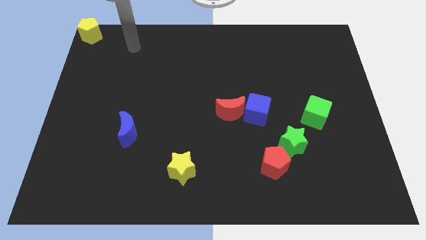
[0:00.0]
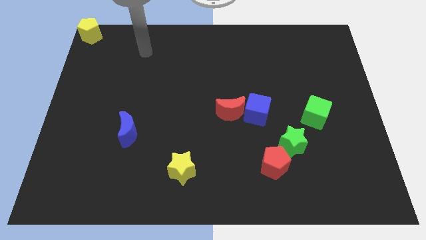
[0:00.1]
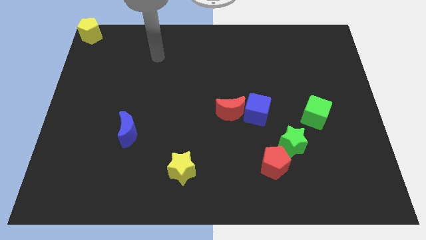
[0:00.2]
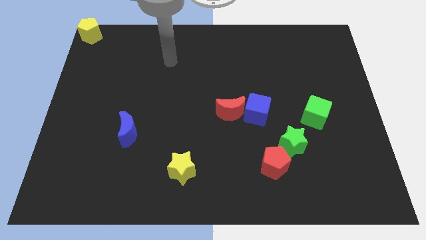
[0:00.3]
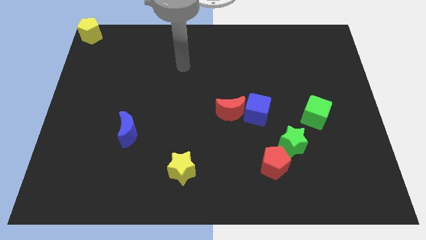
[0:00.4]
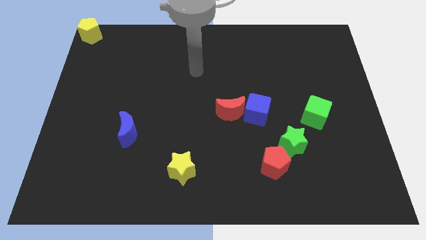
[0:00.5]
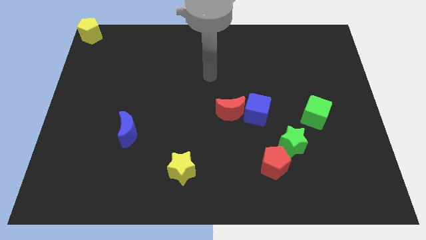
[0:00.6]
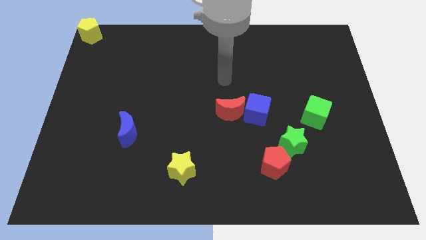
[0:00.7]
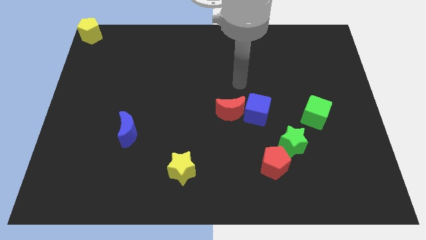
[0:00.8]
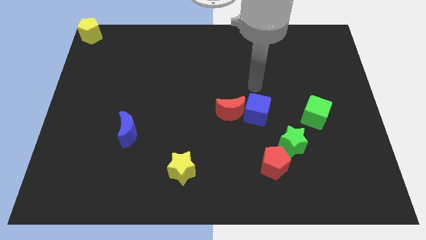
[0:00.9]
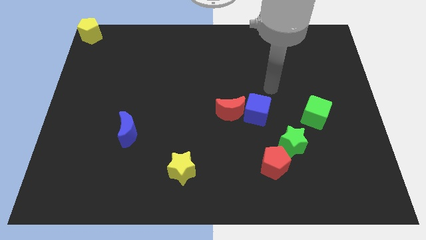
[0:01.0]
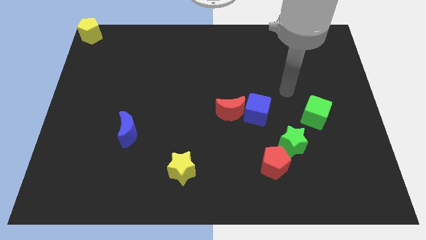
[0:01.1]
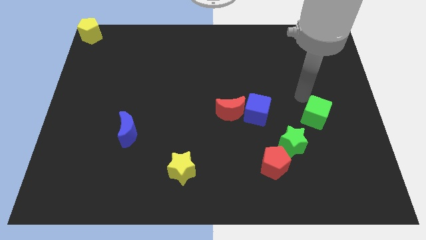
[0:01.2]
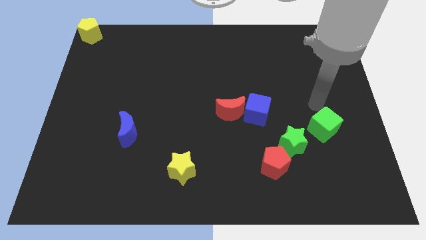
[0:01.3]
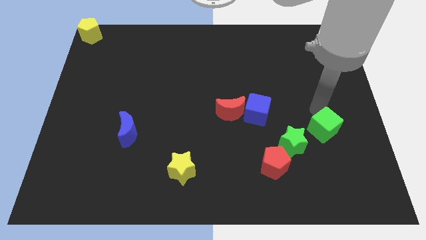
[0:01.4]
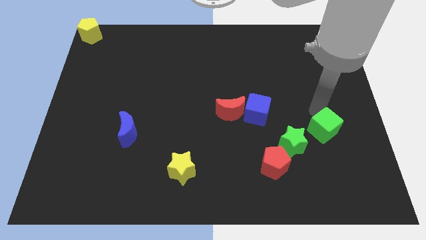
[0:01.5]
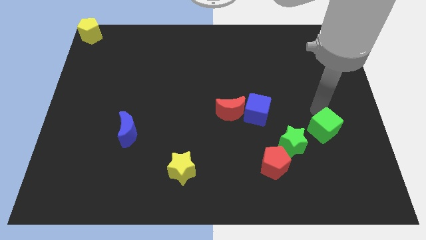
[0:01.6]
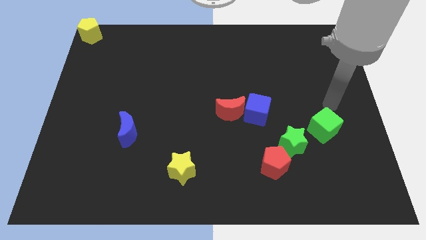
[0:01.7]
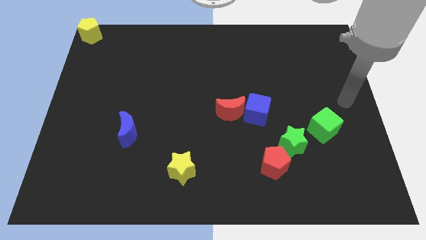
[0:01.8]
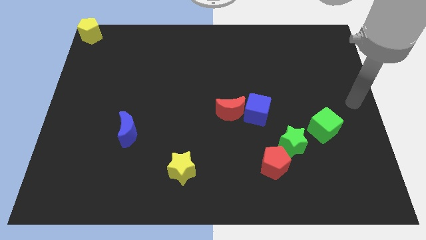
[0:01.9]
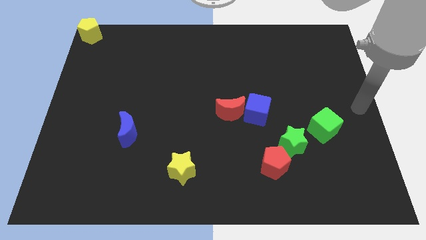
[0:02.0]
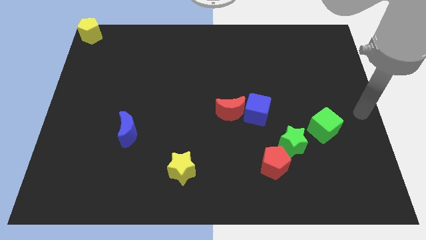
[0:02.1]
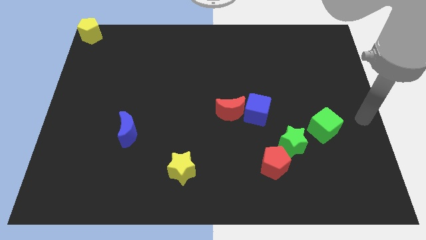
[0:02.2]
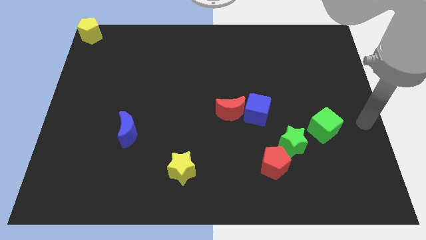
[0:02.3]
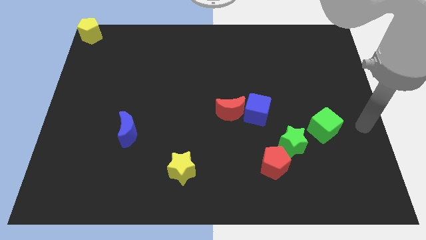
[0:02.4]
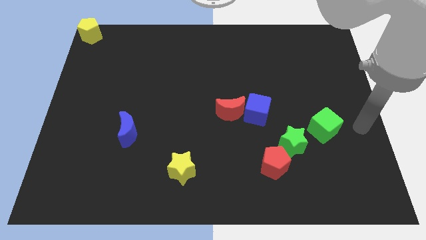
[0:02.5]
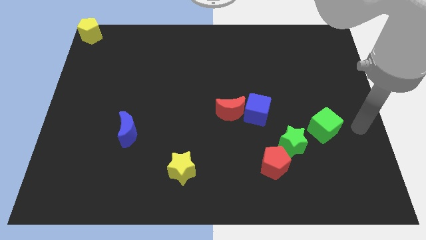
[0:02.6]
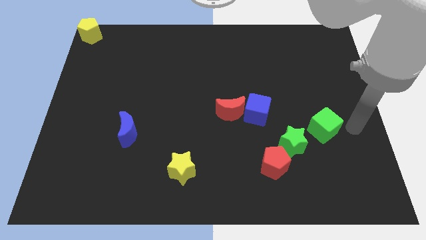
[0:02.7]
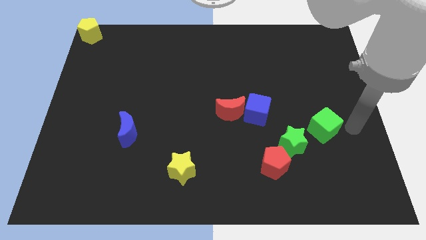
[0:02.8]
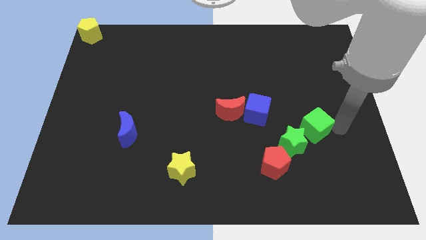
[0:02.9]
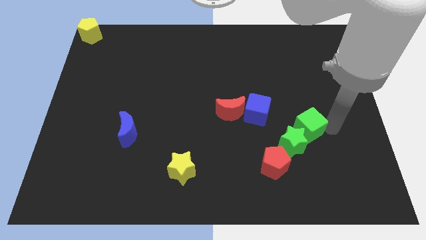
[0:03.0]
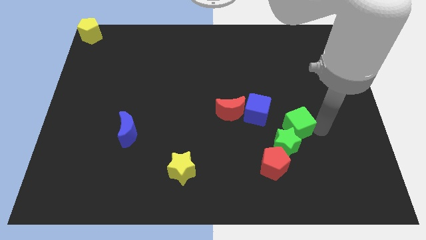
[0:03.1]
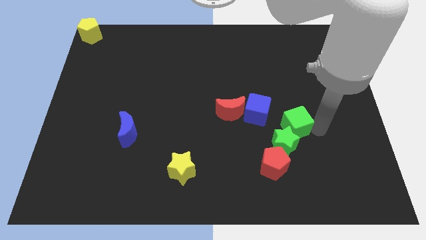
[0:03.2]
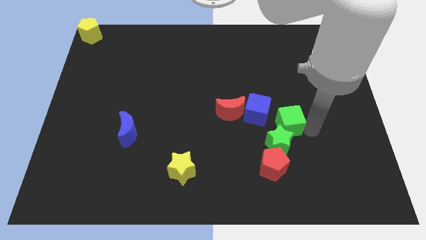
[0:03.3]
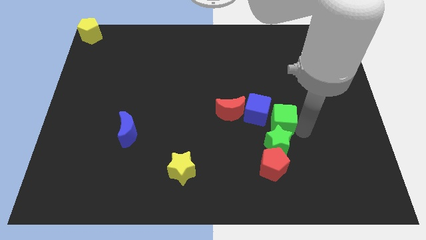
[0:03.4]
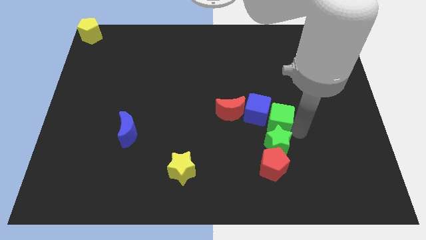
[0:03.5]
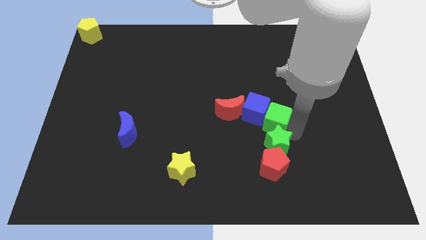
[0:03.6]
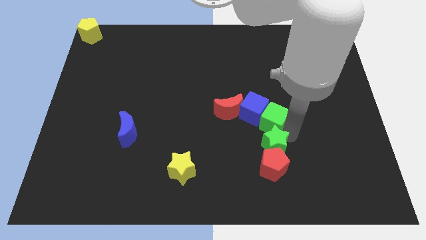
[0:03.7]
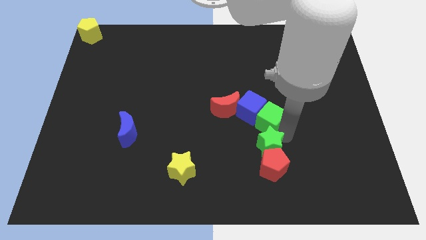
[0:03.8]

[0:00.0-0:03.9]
place the green cube vertically above the green star

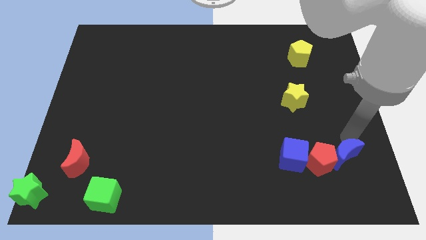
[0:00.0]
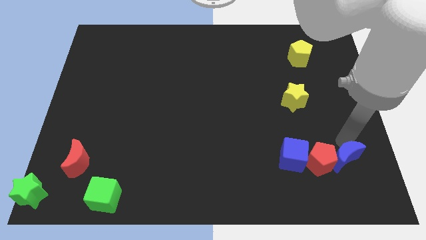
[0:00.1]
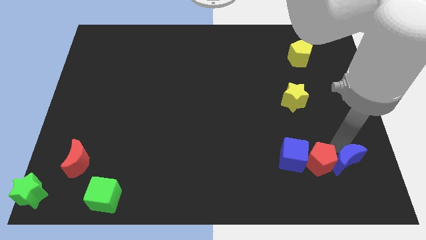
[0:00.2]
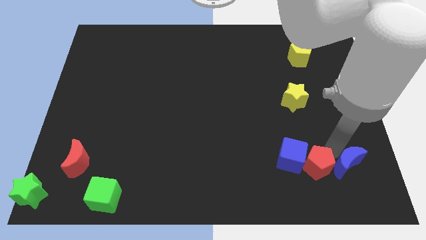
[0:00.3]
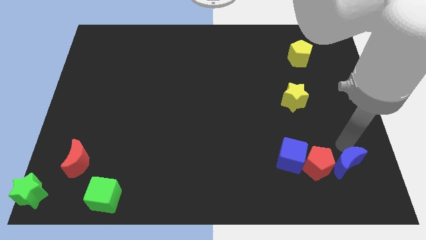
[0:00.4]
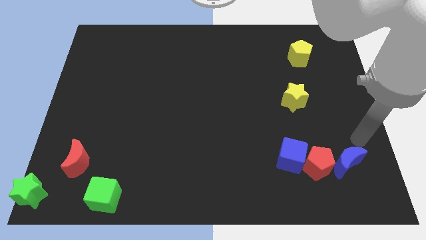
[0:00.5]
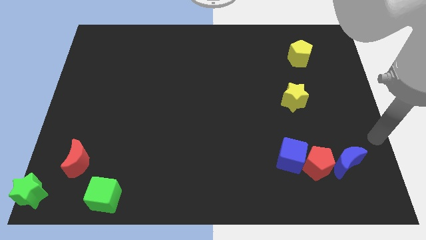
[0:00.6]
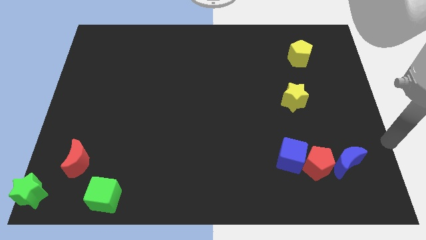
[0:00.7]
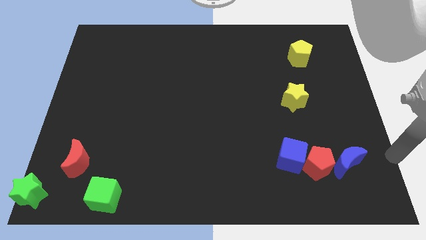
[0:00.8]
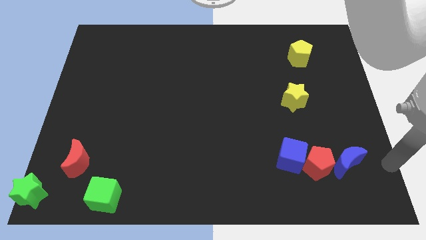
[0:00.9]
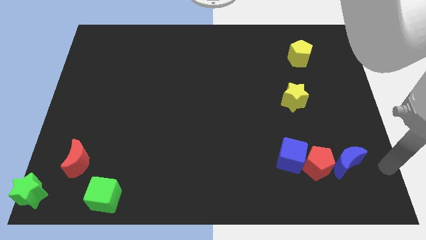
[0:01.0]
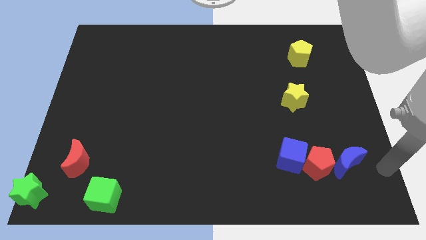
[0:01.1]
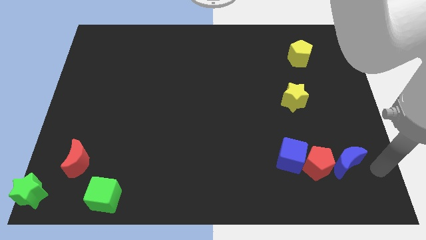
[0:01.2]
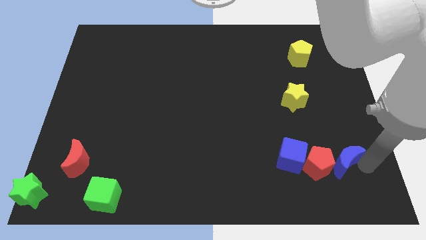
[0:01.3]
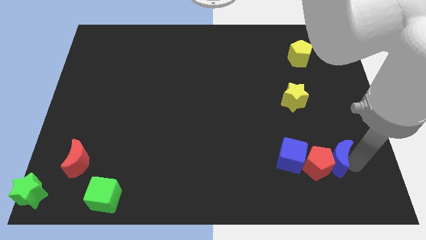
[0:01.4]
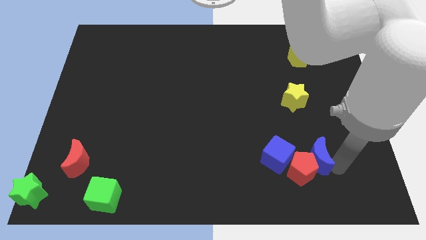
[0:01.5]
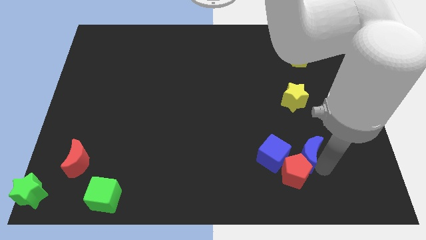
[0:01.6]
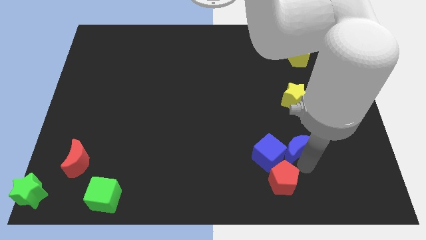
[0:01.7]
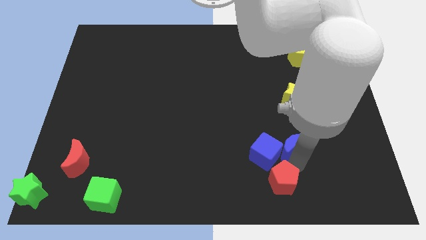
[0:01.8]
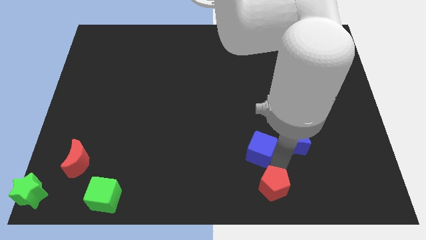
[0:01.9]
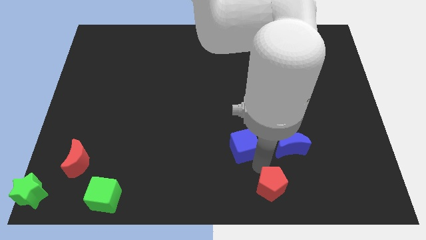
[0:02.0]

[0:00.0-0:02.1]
move the red pentagon to the bottom right

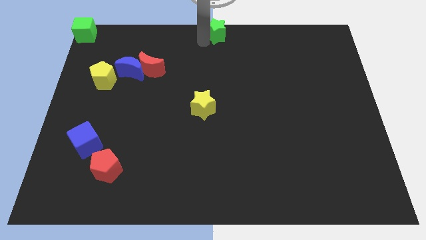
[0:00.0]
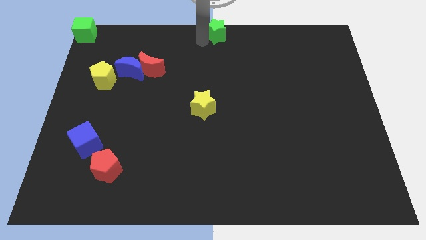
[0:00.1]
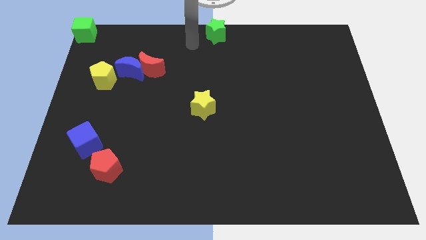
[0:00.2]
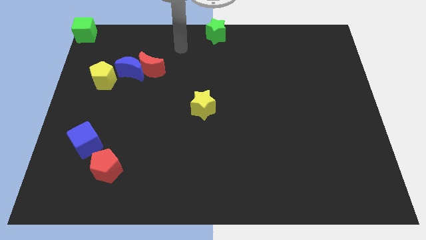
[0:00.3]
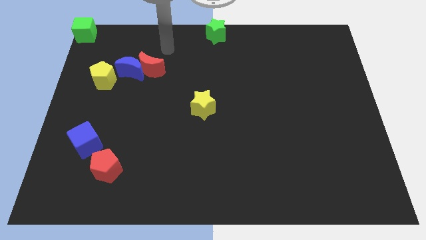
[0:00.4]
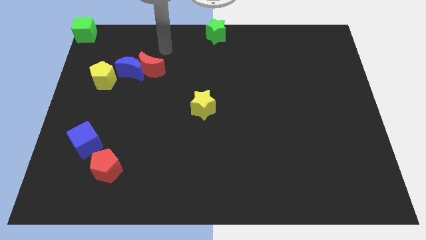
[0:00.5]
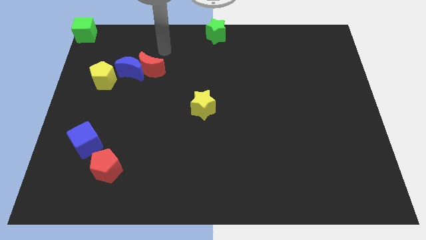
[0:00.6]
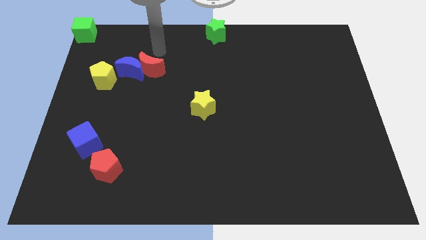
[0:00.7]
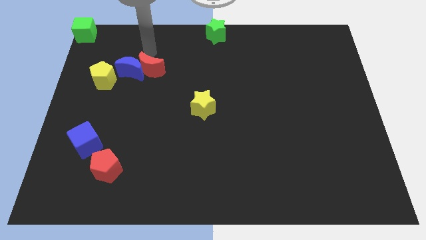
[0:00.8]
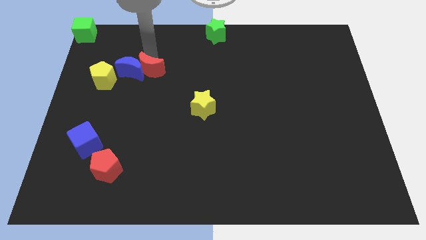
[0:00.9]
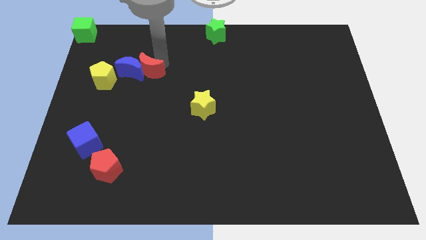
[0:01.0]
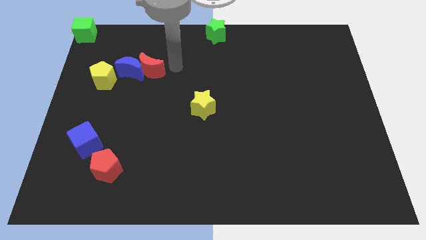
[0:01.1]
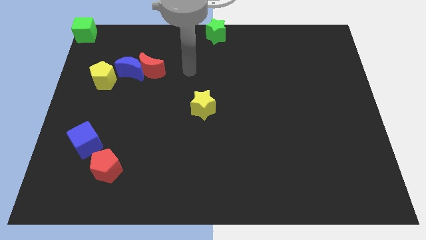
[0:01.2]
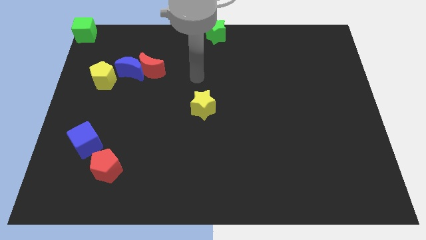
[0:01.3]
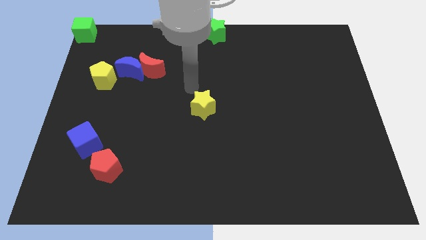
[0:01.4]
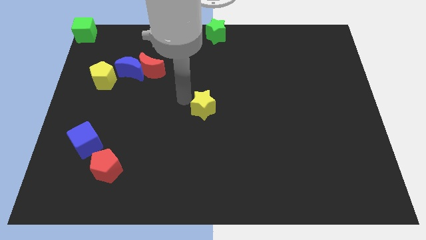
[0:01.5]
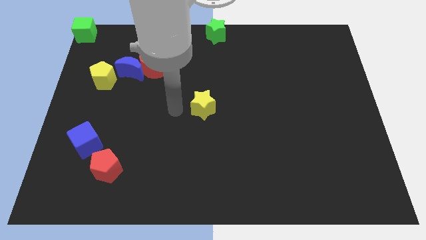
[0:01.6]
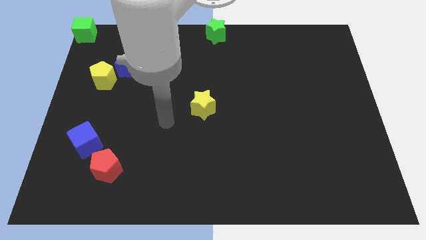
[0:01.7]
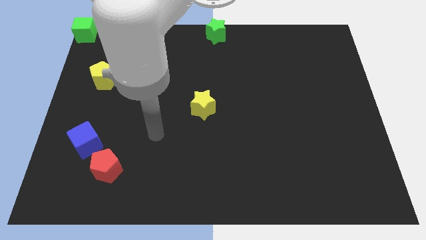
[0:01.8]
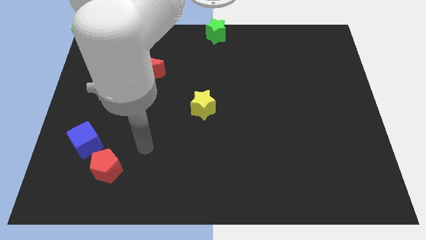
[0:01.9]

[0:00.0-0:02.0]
move your arm away from the green star

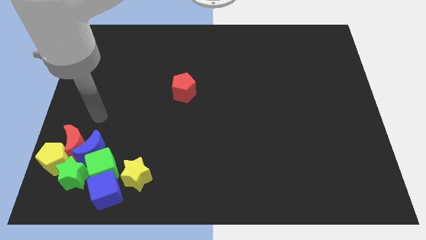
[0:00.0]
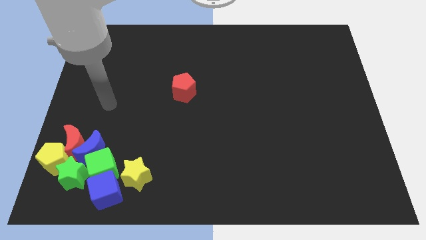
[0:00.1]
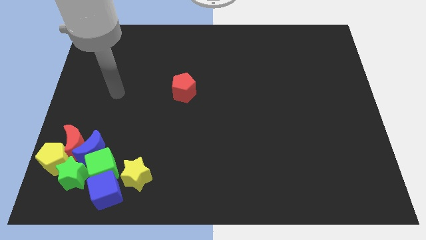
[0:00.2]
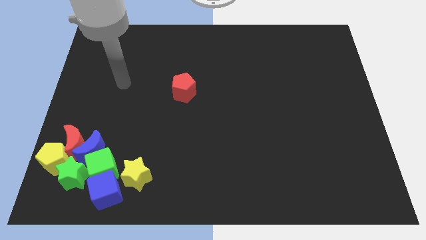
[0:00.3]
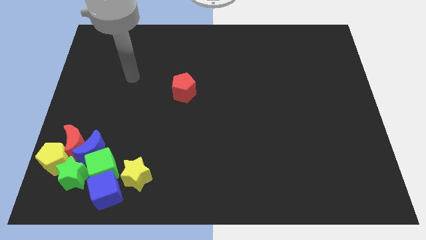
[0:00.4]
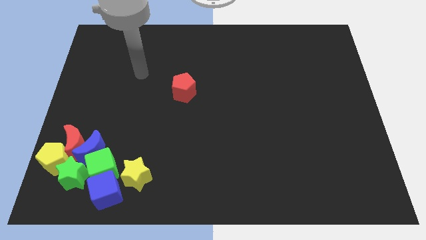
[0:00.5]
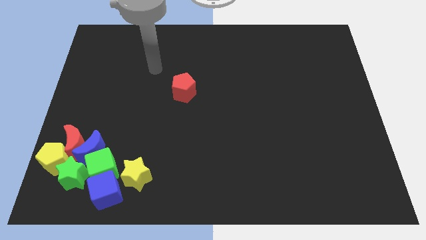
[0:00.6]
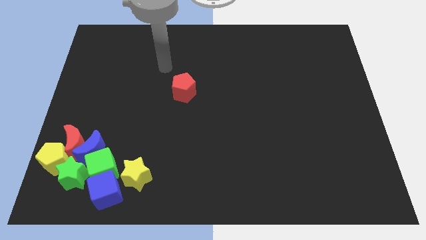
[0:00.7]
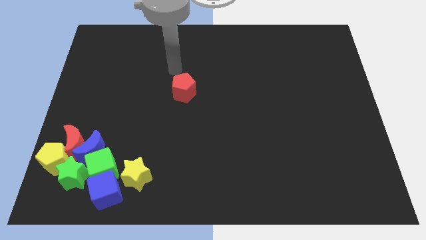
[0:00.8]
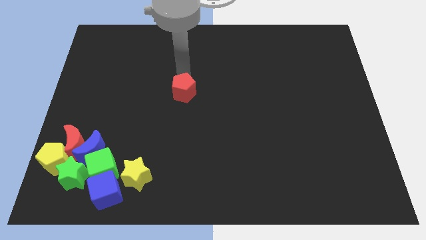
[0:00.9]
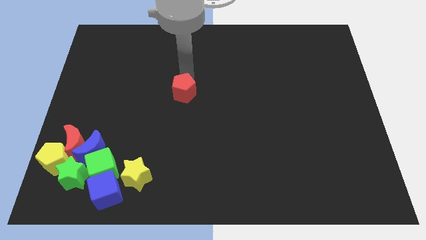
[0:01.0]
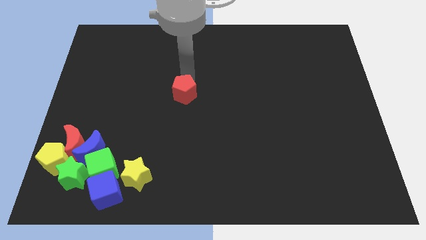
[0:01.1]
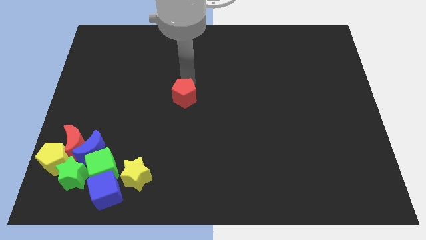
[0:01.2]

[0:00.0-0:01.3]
touch the top of the red pentagon
